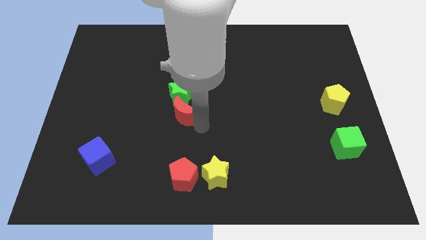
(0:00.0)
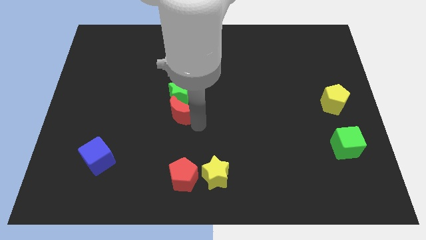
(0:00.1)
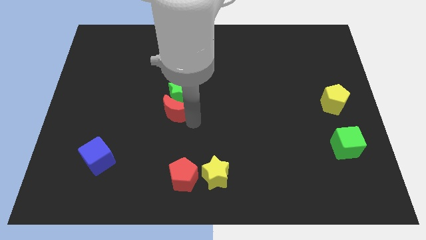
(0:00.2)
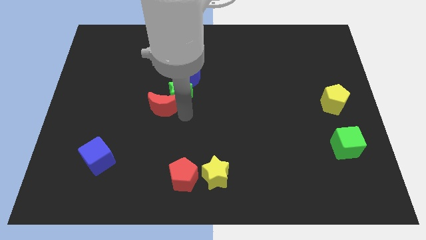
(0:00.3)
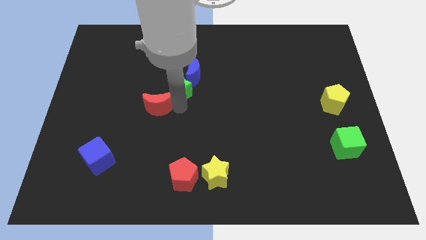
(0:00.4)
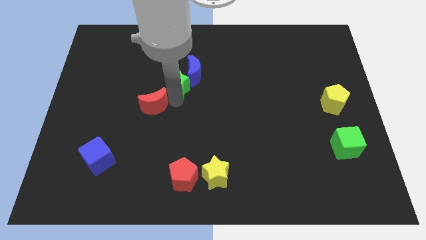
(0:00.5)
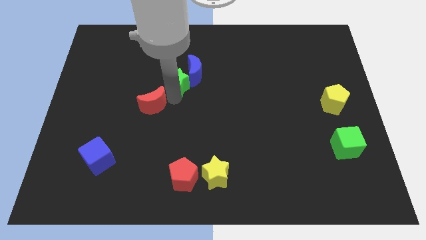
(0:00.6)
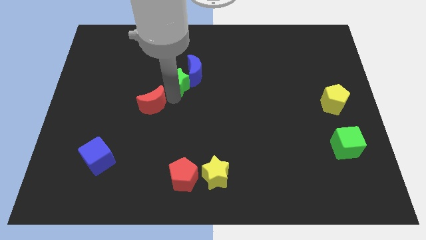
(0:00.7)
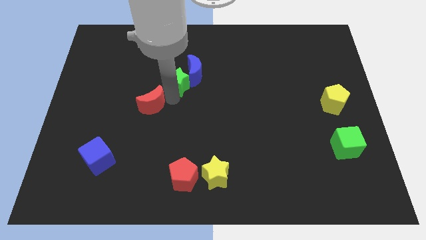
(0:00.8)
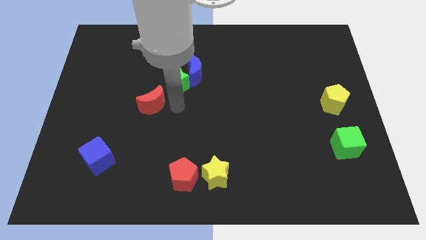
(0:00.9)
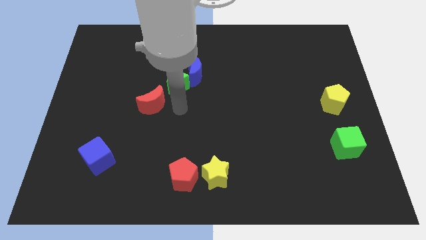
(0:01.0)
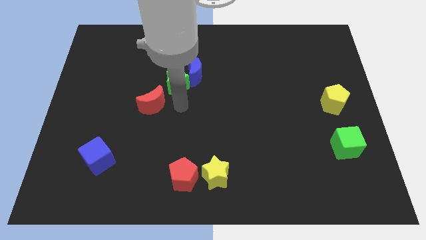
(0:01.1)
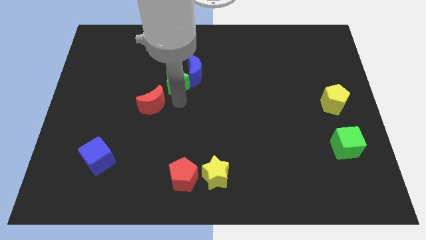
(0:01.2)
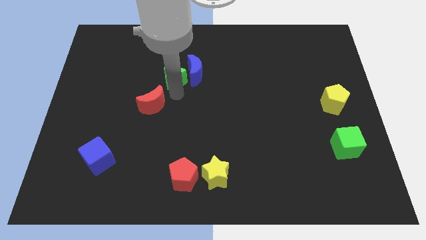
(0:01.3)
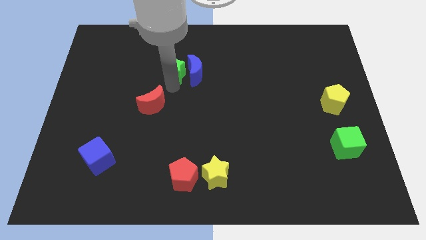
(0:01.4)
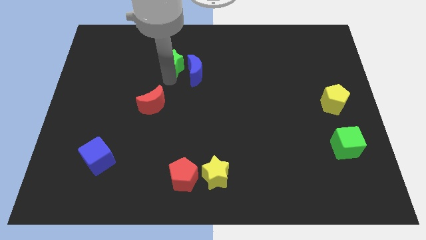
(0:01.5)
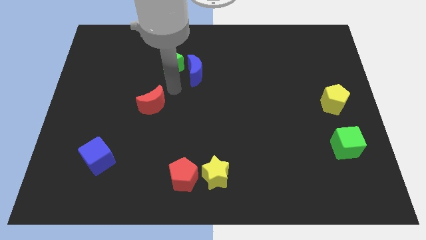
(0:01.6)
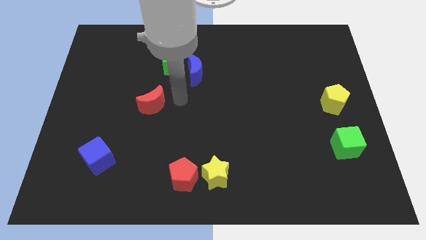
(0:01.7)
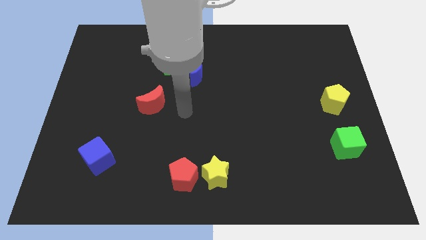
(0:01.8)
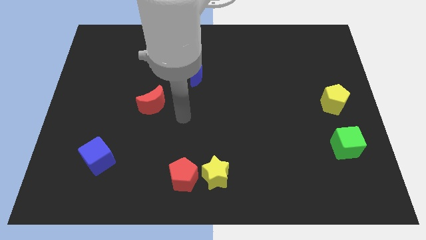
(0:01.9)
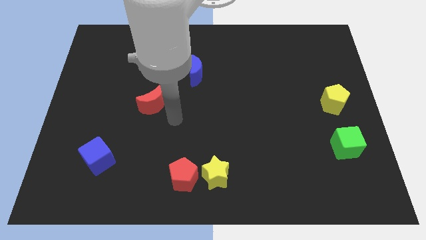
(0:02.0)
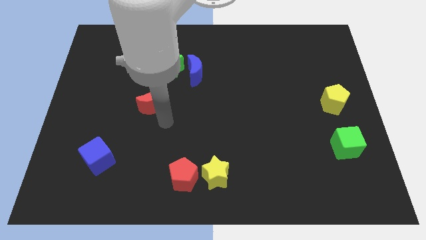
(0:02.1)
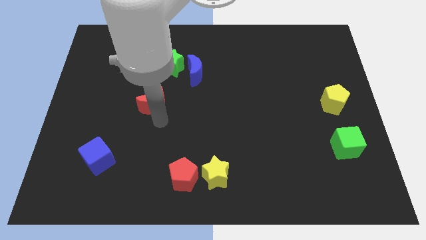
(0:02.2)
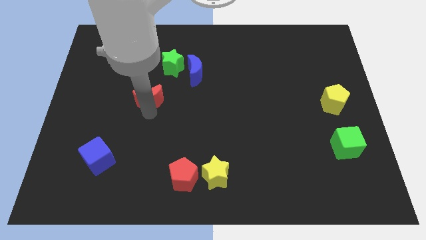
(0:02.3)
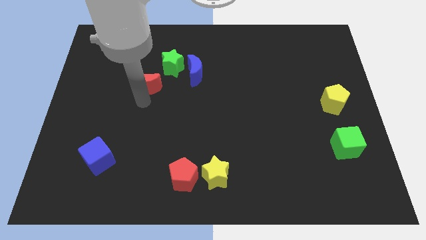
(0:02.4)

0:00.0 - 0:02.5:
push the green star upwards

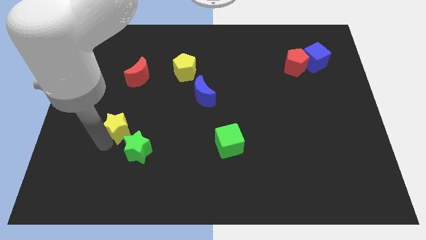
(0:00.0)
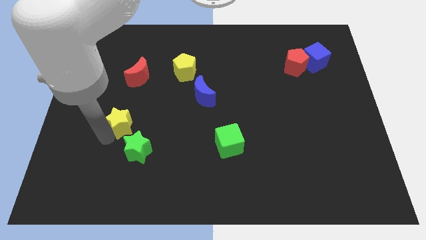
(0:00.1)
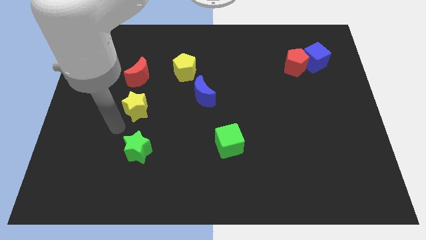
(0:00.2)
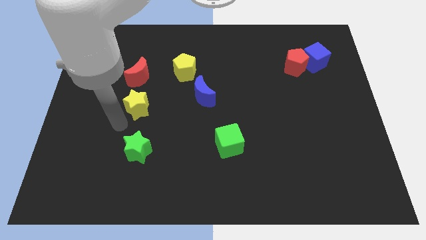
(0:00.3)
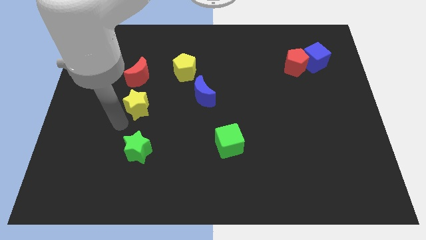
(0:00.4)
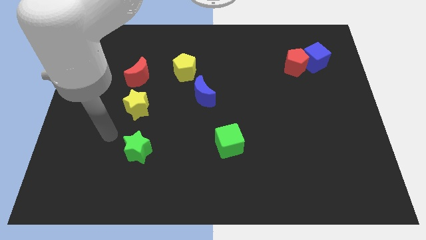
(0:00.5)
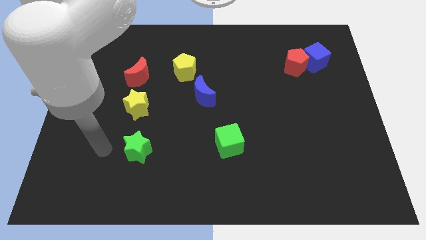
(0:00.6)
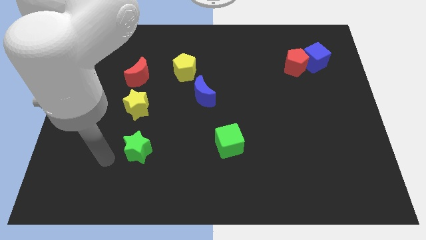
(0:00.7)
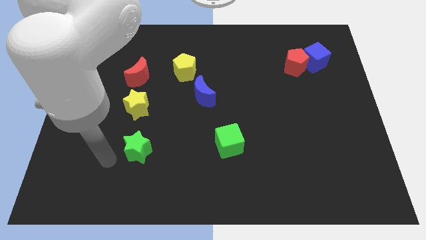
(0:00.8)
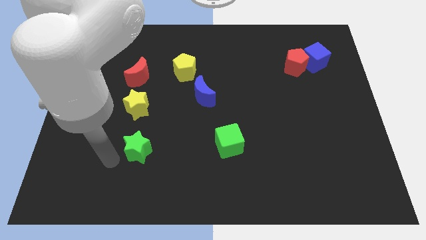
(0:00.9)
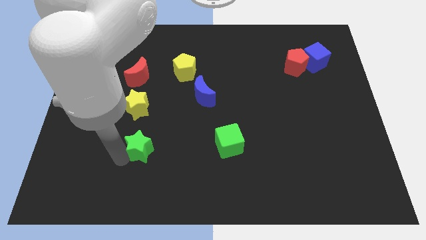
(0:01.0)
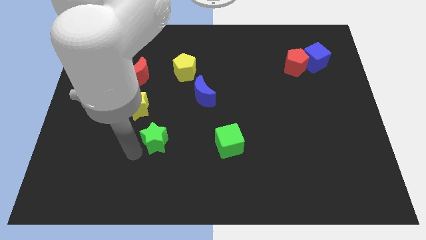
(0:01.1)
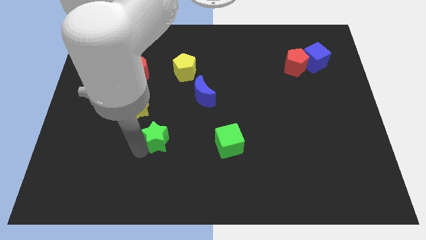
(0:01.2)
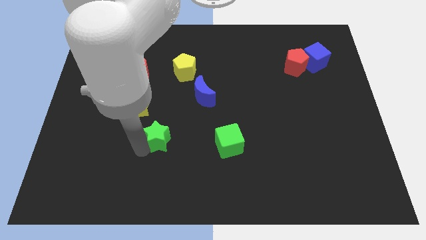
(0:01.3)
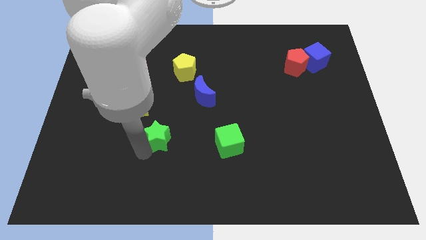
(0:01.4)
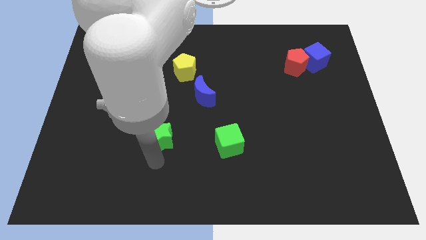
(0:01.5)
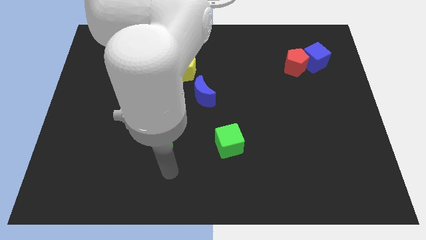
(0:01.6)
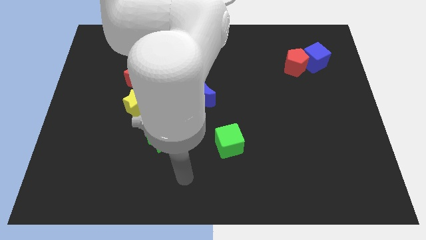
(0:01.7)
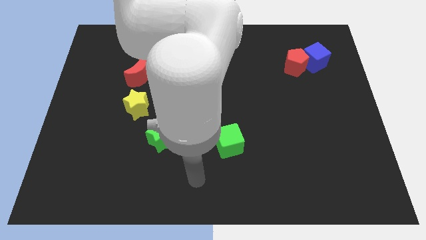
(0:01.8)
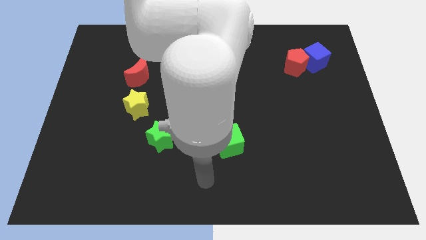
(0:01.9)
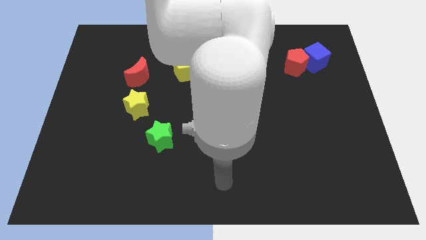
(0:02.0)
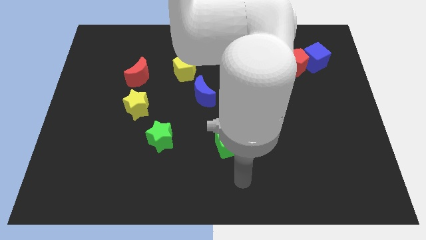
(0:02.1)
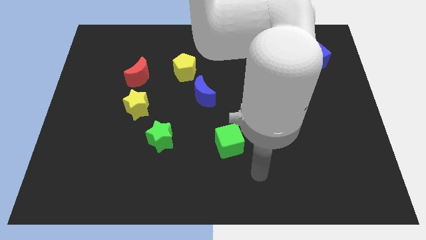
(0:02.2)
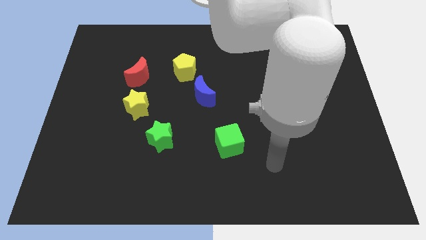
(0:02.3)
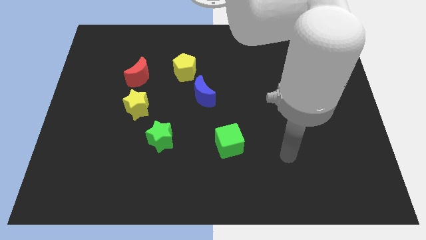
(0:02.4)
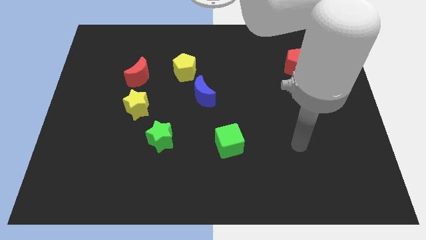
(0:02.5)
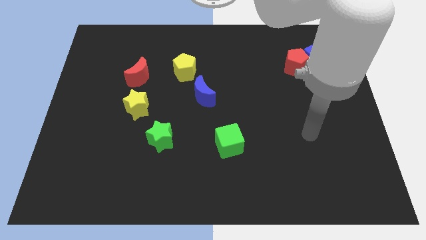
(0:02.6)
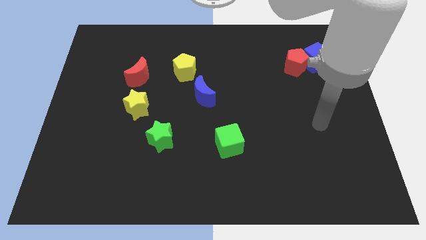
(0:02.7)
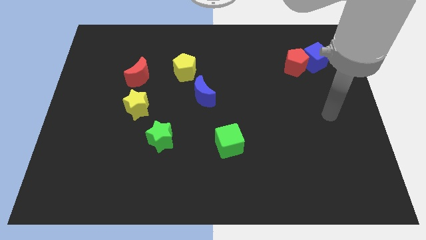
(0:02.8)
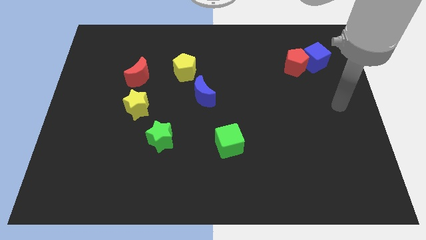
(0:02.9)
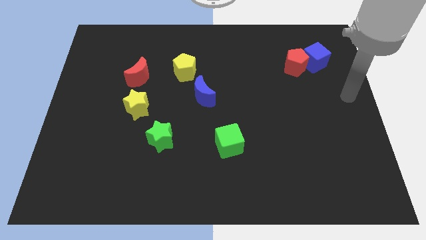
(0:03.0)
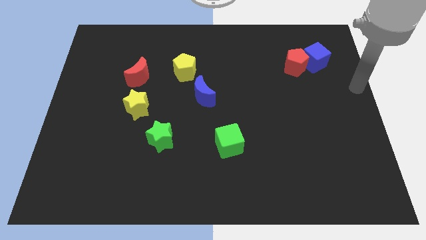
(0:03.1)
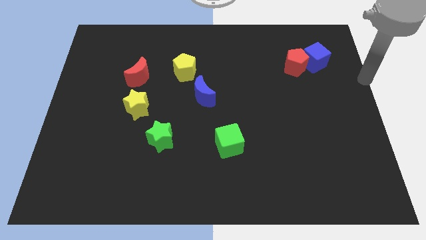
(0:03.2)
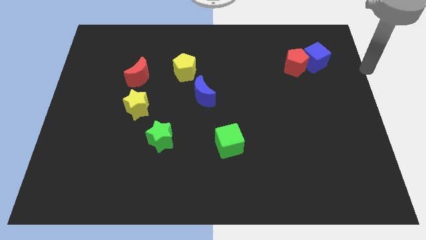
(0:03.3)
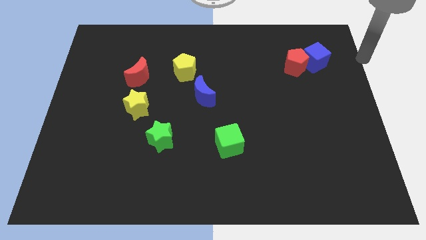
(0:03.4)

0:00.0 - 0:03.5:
move green star star diagonal to the yellow star

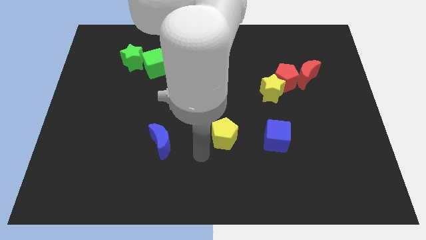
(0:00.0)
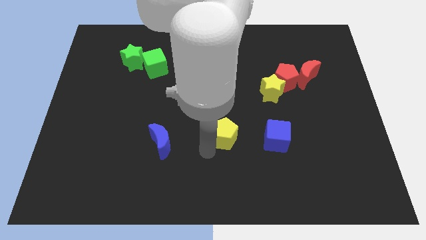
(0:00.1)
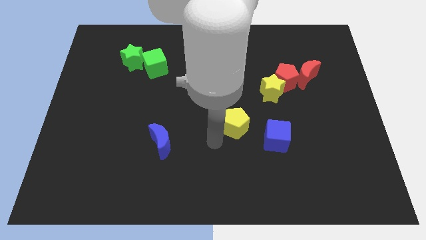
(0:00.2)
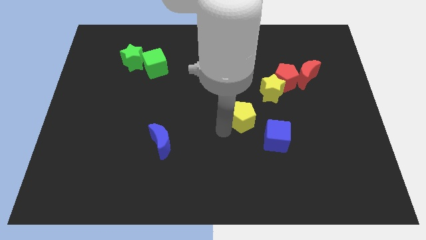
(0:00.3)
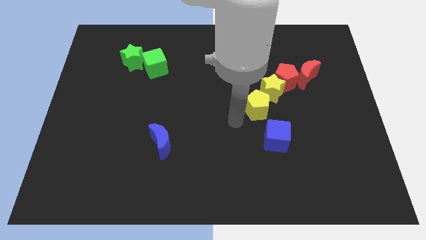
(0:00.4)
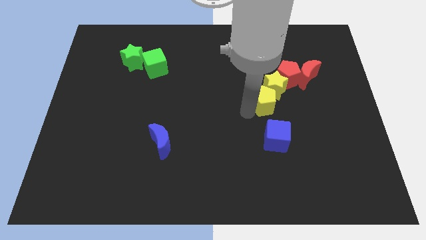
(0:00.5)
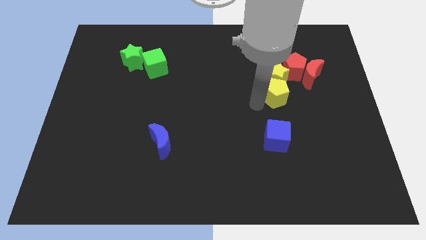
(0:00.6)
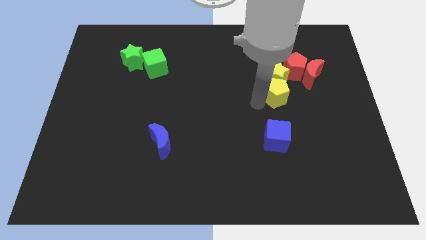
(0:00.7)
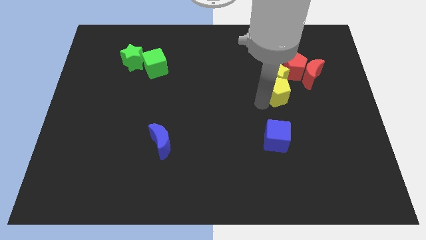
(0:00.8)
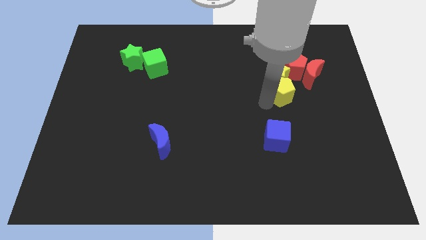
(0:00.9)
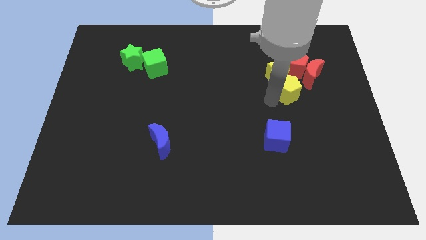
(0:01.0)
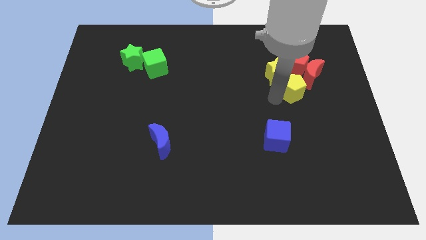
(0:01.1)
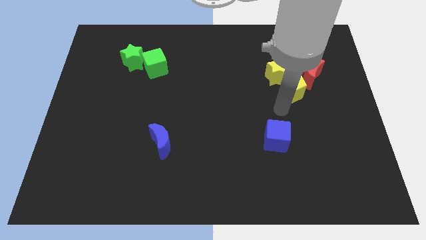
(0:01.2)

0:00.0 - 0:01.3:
group up the yellow blocks with the red things

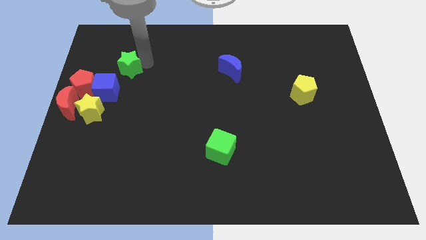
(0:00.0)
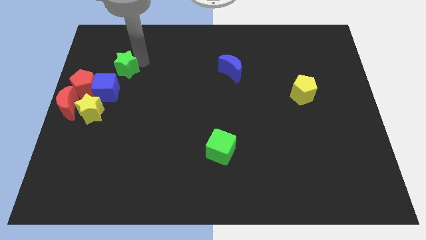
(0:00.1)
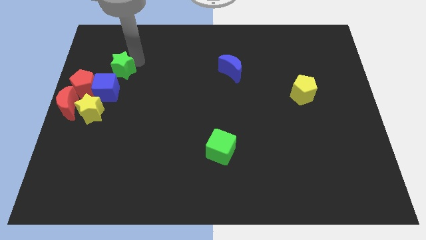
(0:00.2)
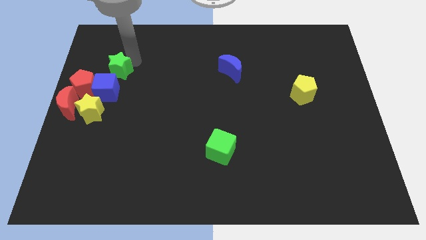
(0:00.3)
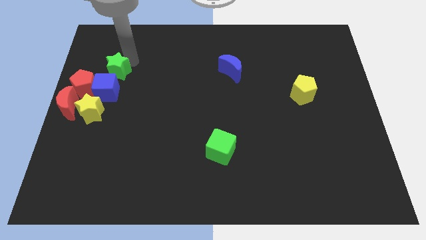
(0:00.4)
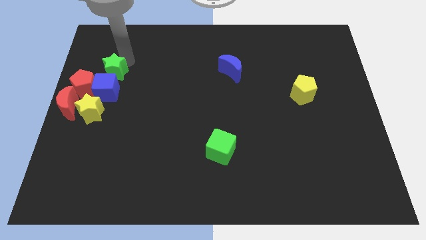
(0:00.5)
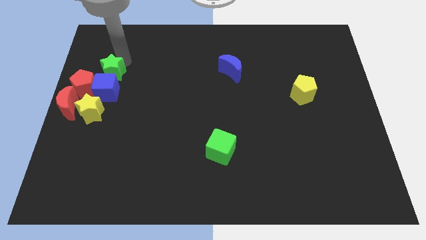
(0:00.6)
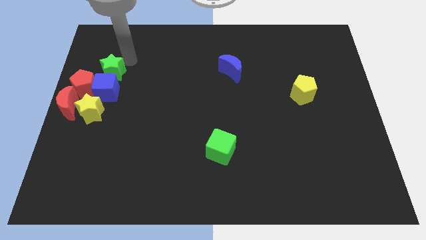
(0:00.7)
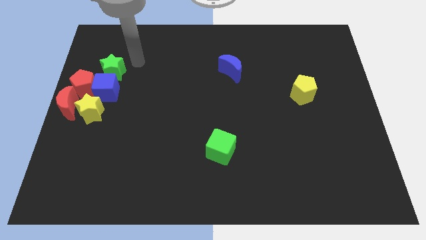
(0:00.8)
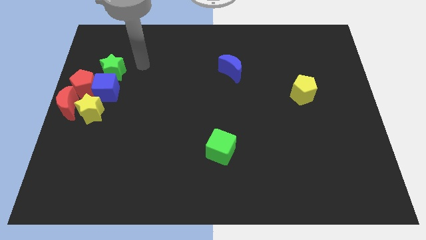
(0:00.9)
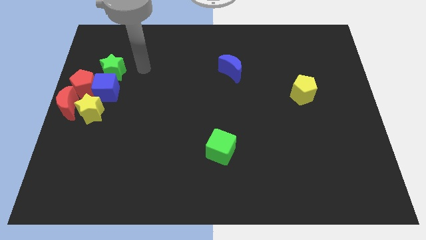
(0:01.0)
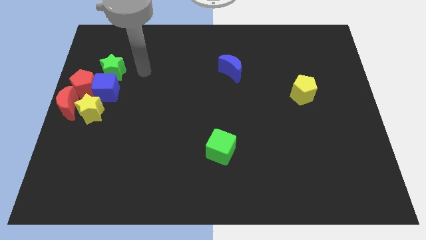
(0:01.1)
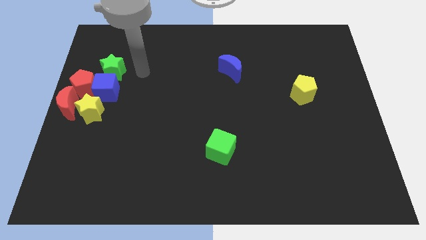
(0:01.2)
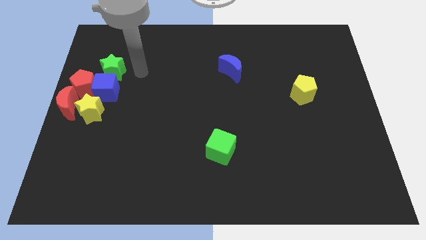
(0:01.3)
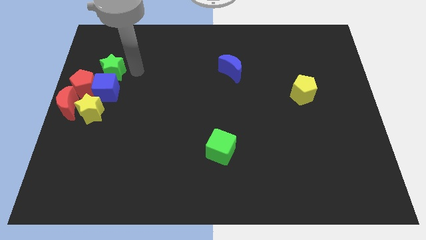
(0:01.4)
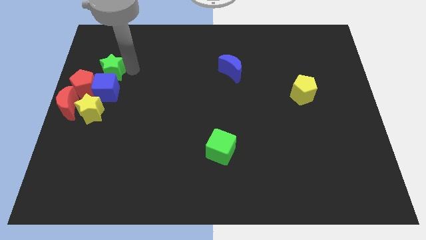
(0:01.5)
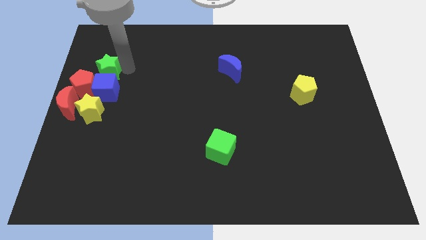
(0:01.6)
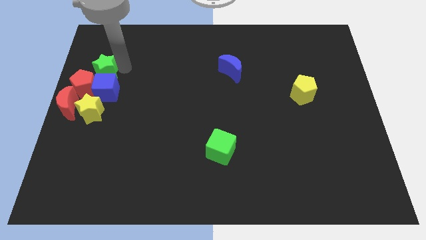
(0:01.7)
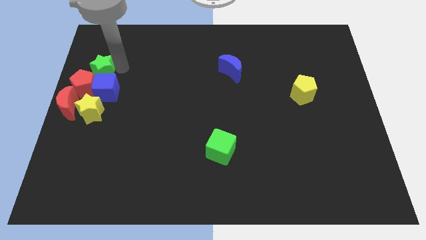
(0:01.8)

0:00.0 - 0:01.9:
put the green star vertically above the blue cube
